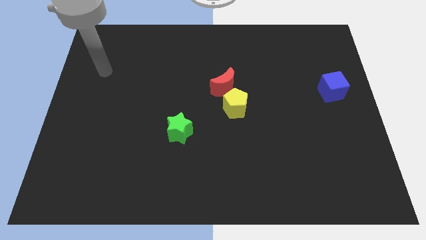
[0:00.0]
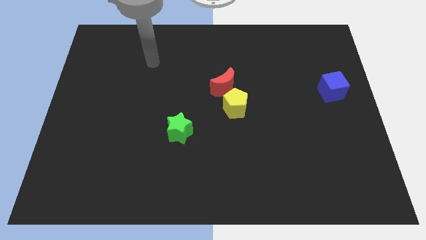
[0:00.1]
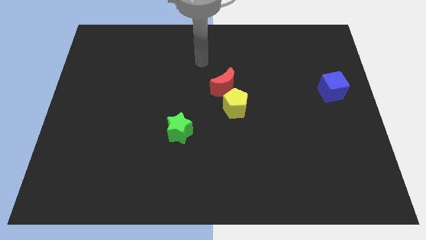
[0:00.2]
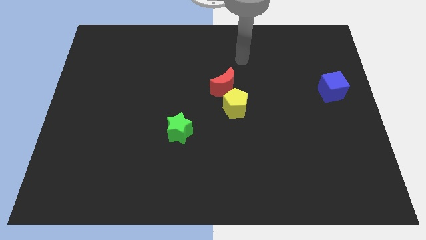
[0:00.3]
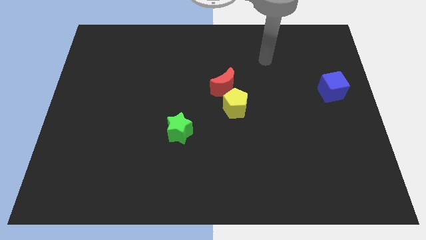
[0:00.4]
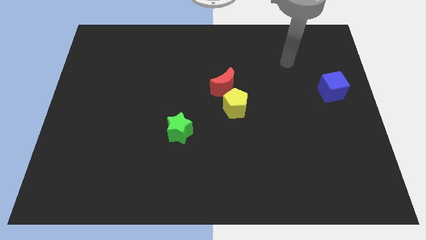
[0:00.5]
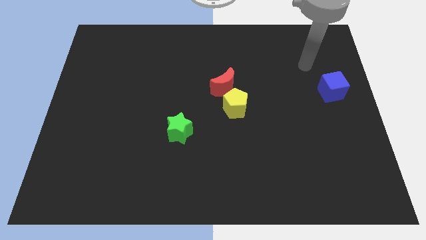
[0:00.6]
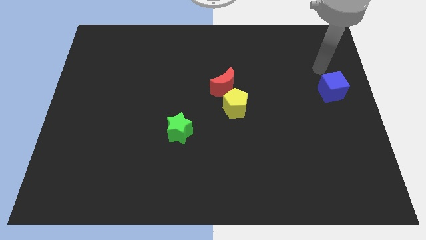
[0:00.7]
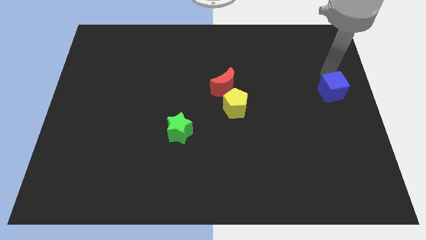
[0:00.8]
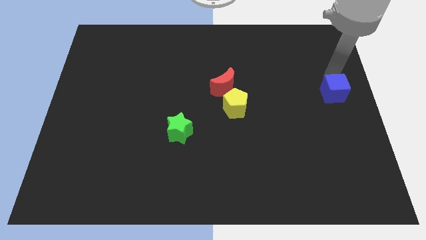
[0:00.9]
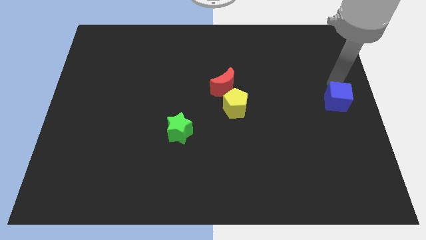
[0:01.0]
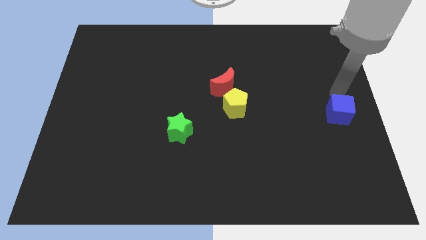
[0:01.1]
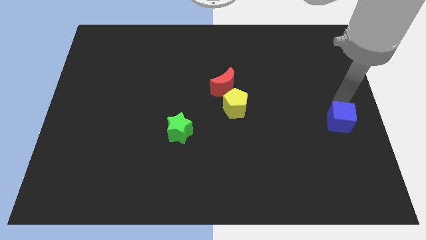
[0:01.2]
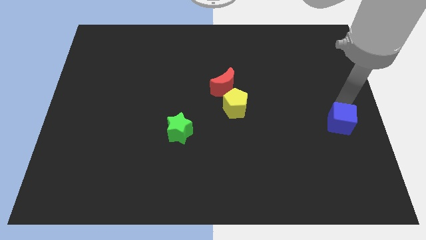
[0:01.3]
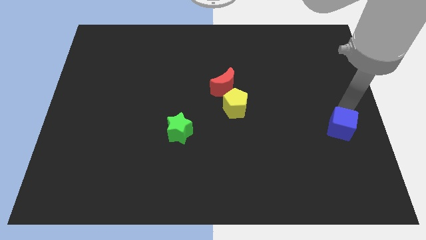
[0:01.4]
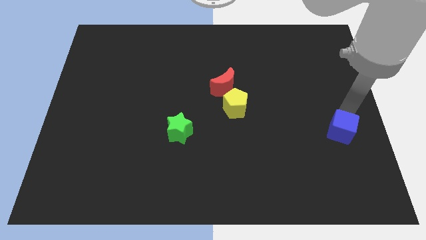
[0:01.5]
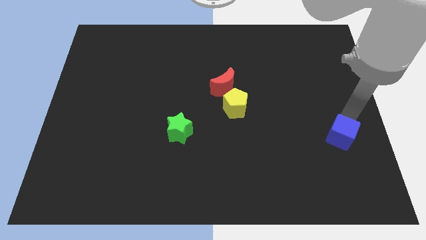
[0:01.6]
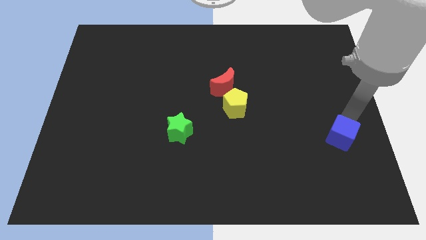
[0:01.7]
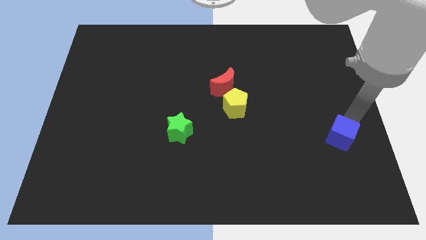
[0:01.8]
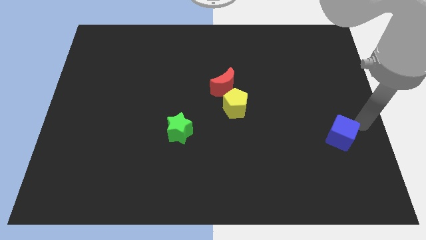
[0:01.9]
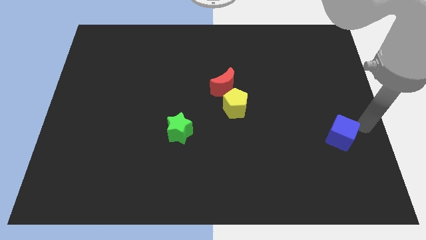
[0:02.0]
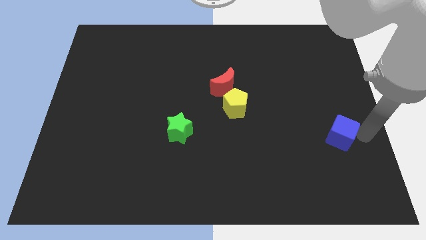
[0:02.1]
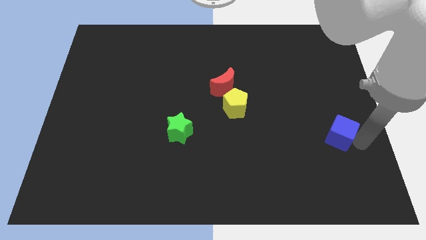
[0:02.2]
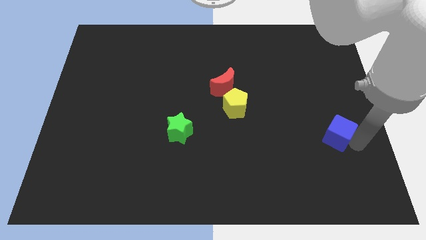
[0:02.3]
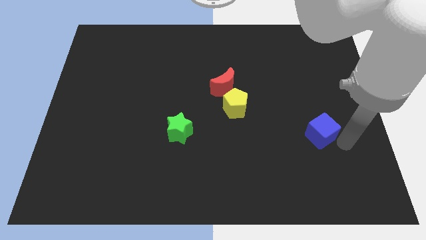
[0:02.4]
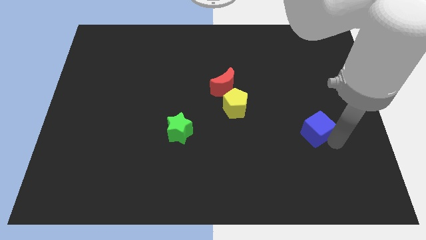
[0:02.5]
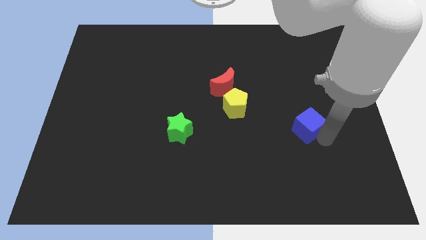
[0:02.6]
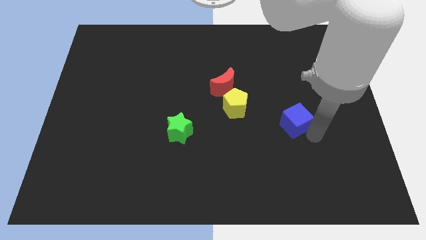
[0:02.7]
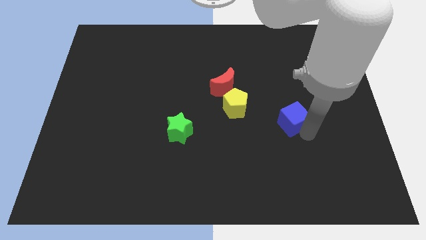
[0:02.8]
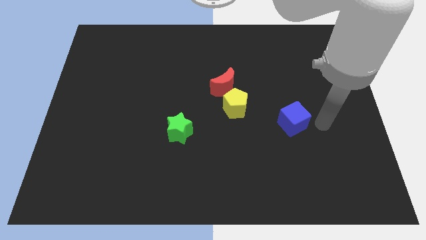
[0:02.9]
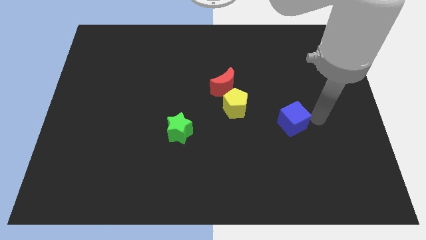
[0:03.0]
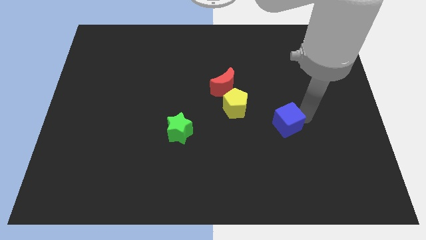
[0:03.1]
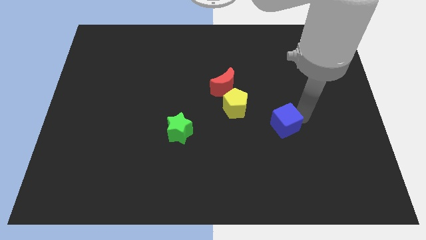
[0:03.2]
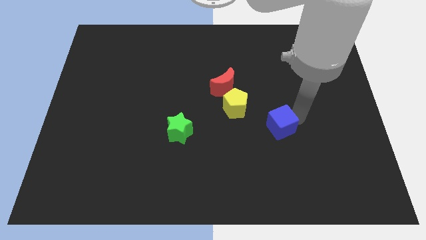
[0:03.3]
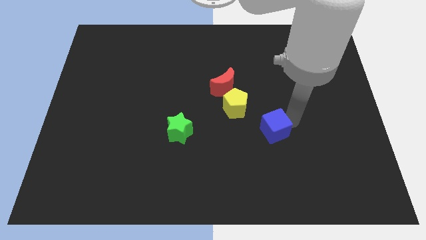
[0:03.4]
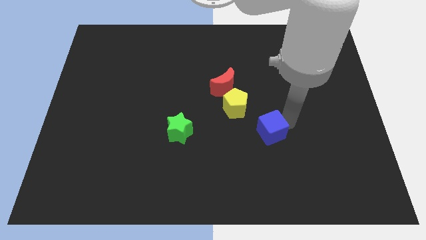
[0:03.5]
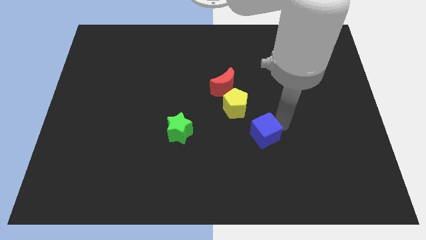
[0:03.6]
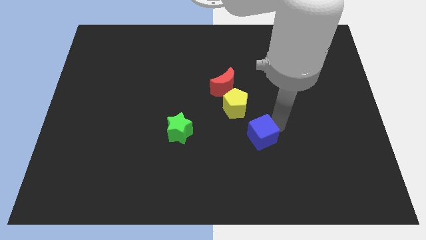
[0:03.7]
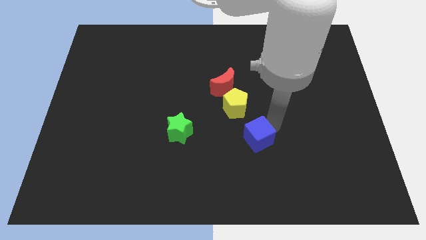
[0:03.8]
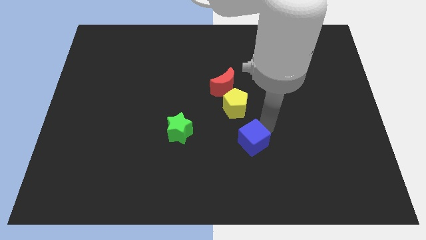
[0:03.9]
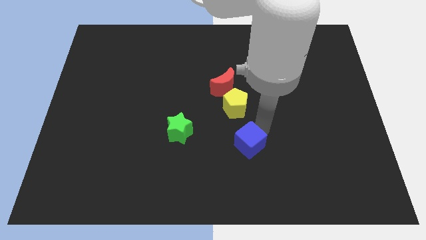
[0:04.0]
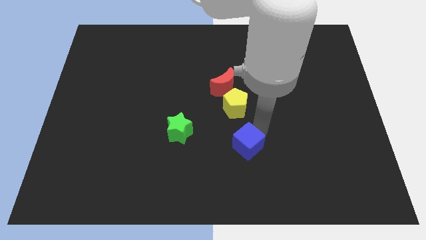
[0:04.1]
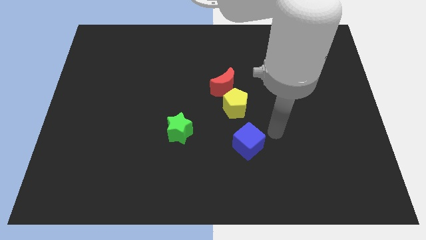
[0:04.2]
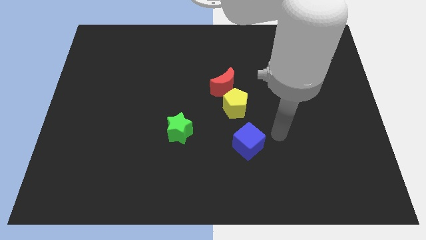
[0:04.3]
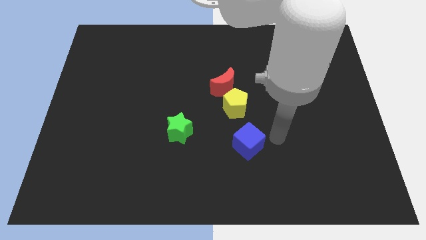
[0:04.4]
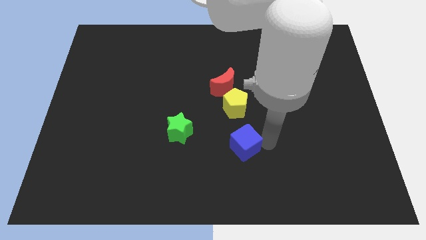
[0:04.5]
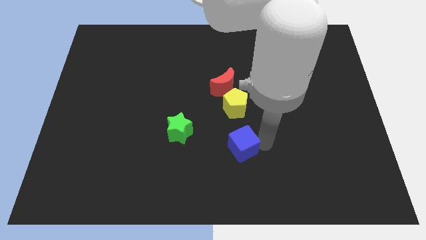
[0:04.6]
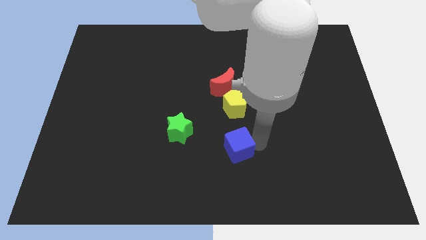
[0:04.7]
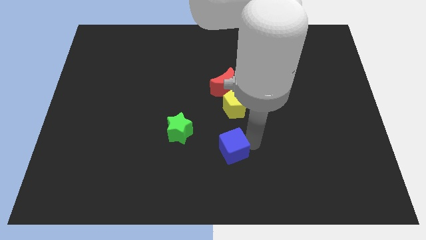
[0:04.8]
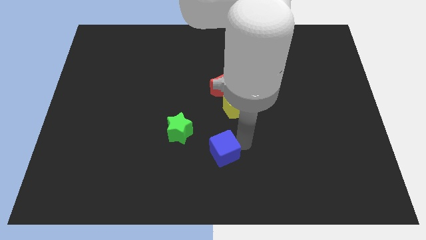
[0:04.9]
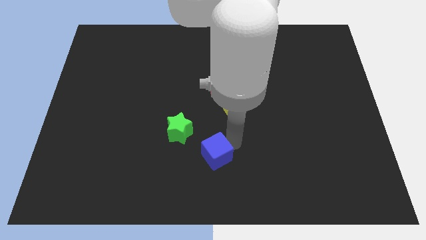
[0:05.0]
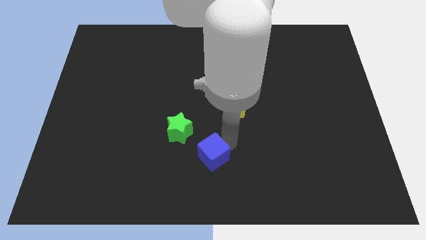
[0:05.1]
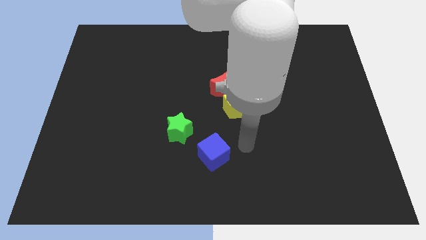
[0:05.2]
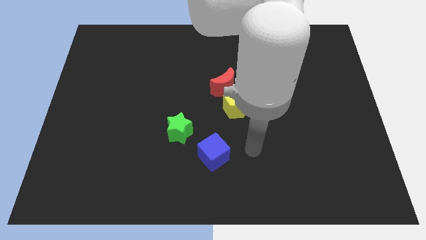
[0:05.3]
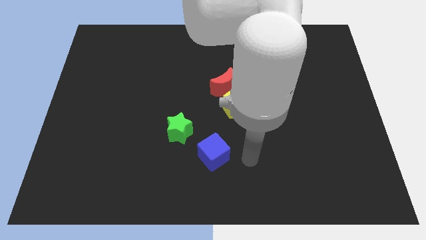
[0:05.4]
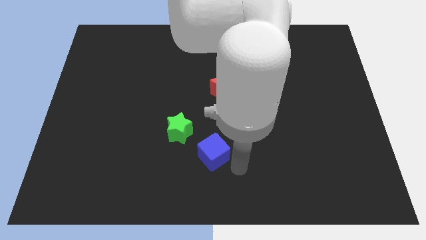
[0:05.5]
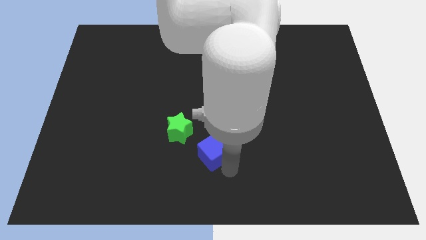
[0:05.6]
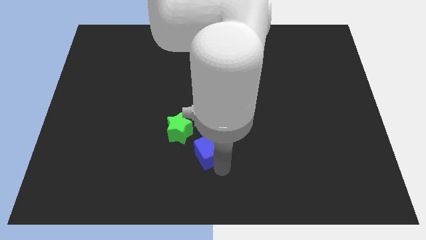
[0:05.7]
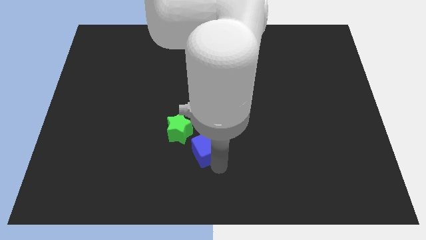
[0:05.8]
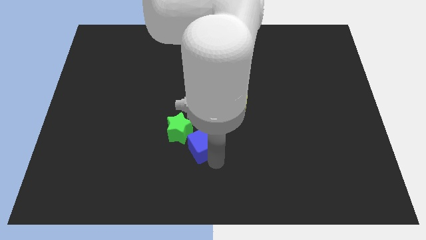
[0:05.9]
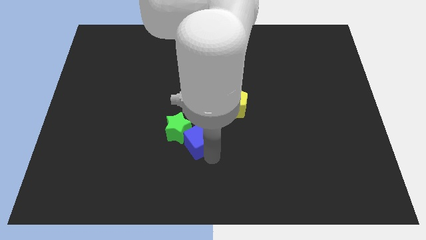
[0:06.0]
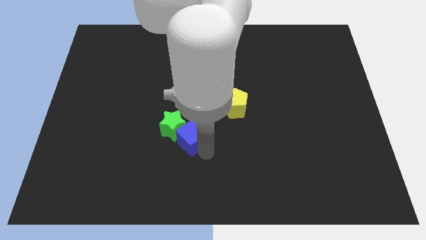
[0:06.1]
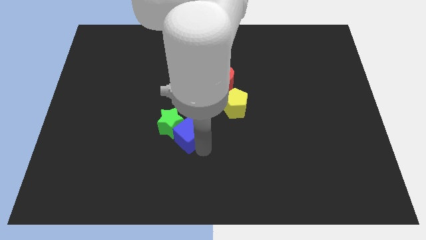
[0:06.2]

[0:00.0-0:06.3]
move the blue cube to the star

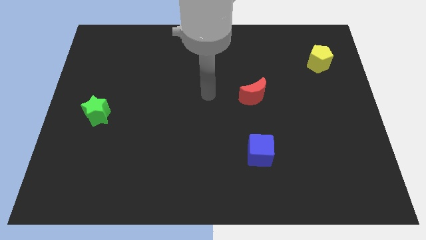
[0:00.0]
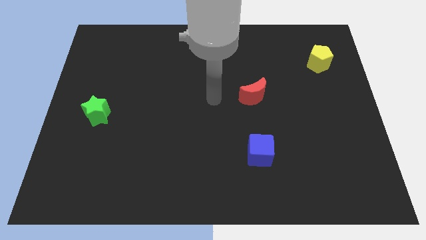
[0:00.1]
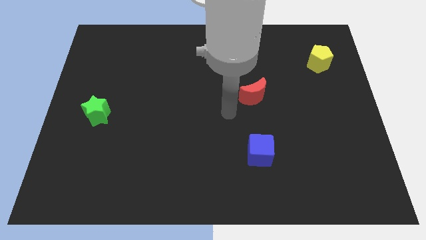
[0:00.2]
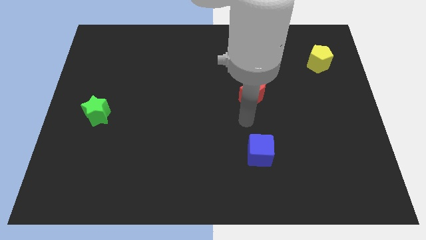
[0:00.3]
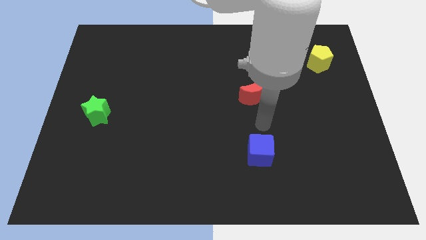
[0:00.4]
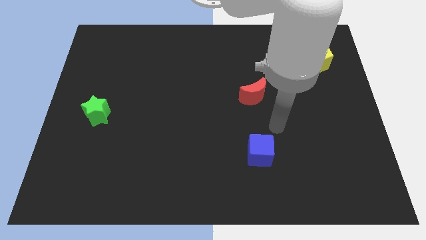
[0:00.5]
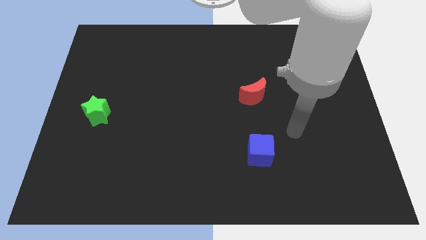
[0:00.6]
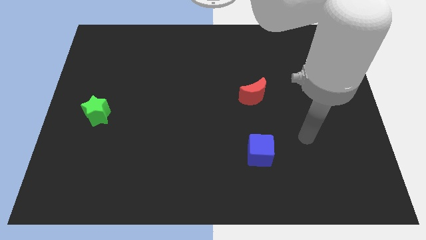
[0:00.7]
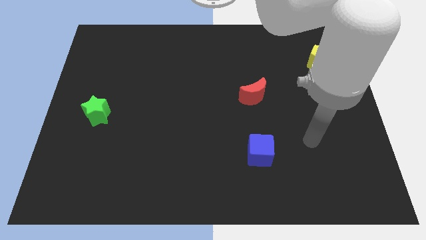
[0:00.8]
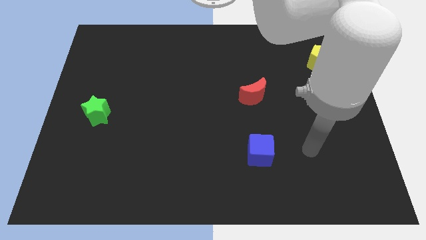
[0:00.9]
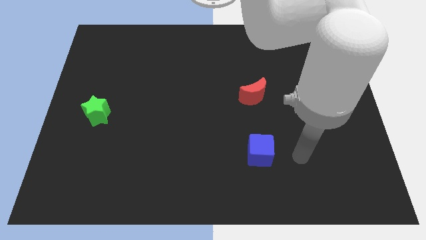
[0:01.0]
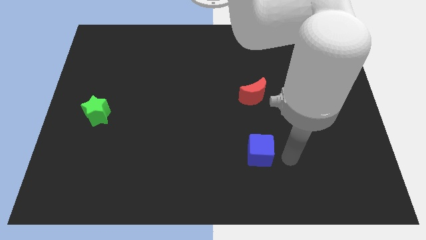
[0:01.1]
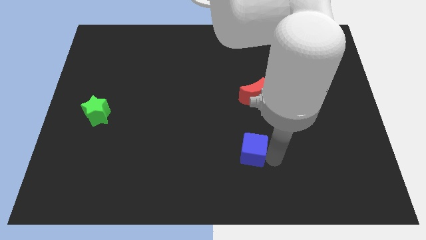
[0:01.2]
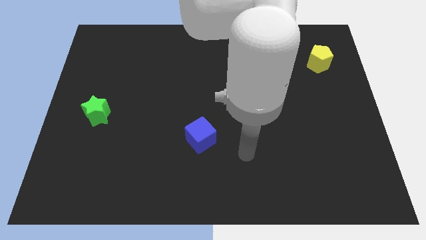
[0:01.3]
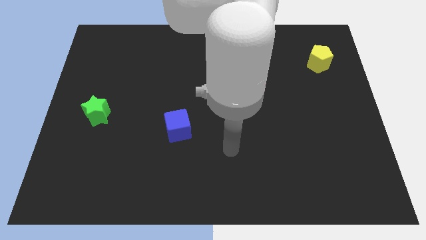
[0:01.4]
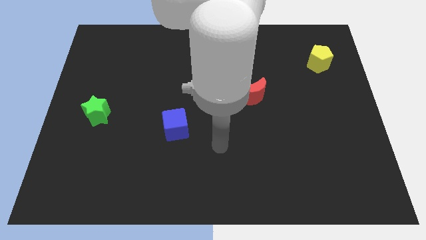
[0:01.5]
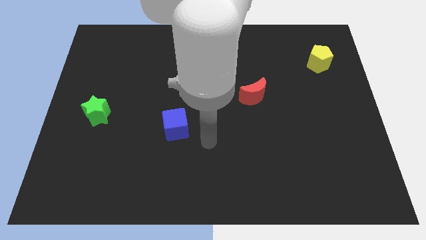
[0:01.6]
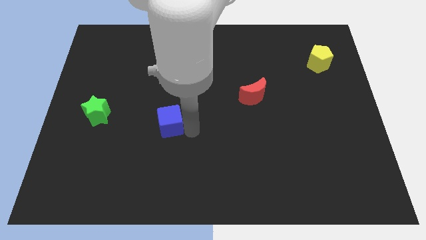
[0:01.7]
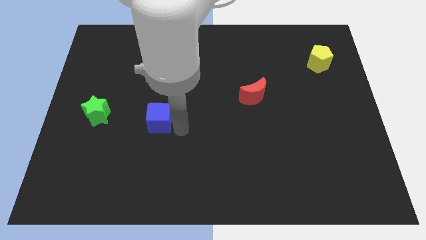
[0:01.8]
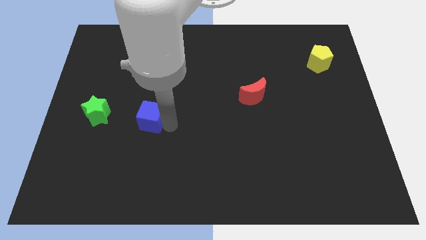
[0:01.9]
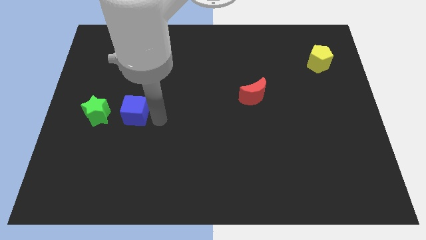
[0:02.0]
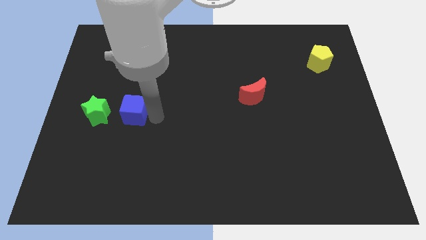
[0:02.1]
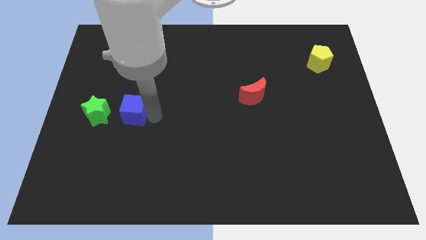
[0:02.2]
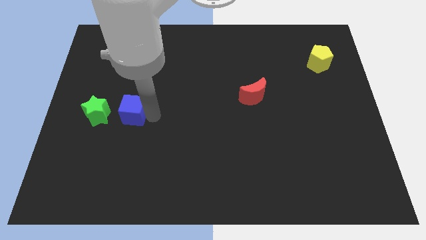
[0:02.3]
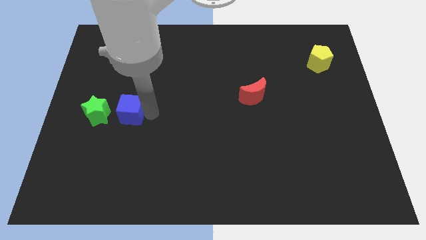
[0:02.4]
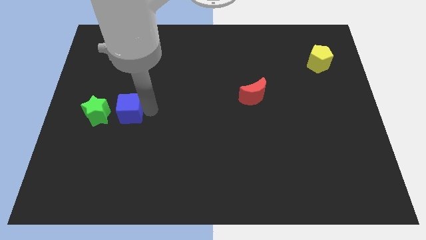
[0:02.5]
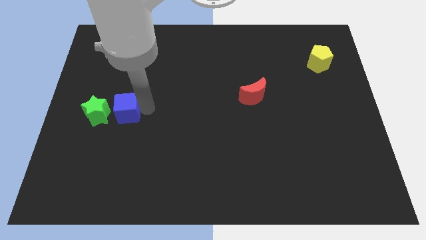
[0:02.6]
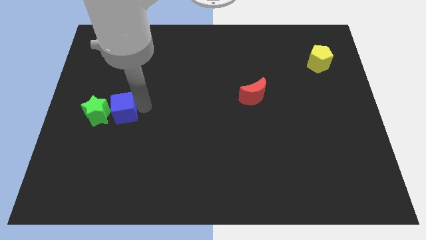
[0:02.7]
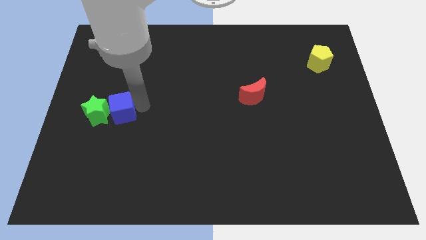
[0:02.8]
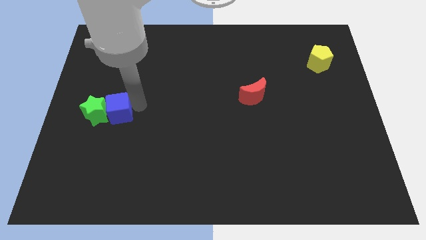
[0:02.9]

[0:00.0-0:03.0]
slide the blue block to the green star
